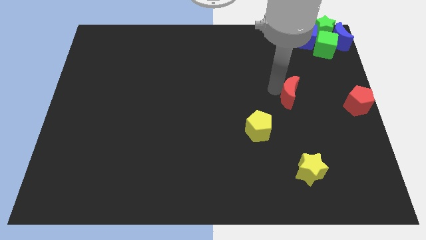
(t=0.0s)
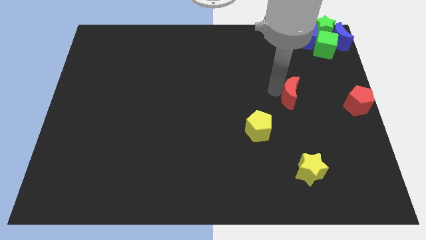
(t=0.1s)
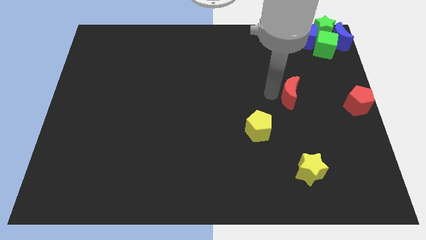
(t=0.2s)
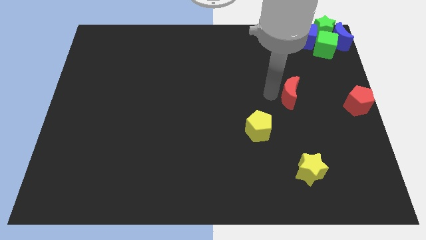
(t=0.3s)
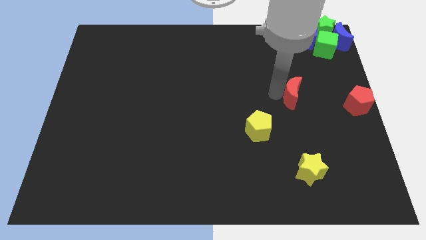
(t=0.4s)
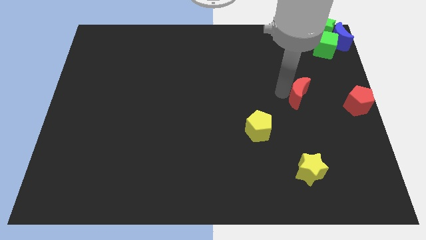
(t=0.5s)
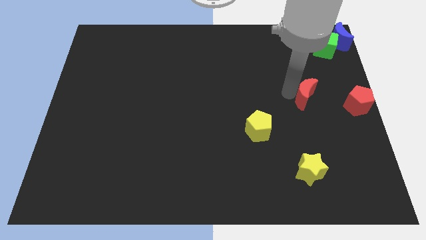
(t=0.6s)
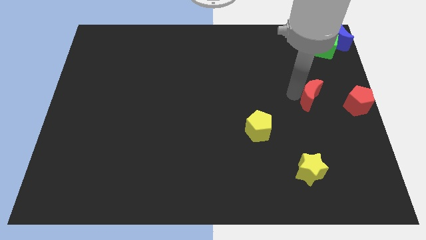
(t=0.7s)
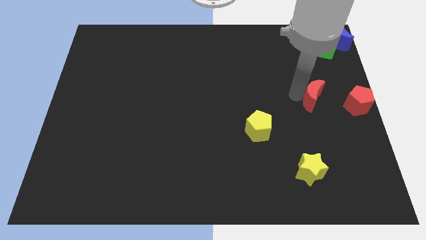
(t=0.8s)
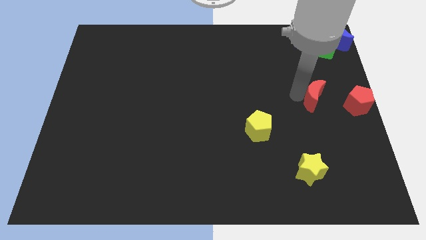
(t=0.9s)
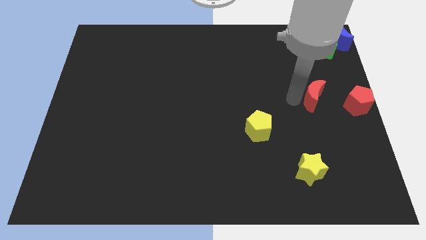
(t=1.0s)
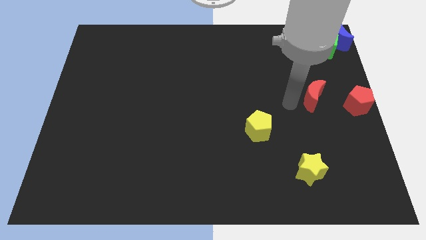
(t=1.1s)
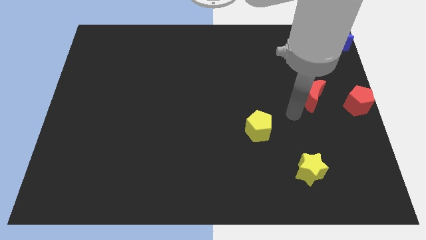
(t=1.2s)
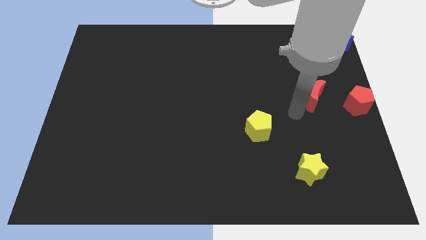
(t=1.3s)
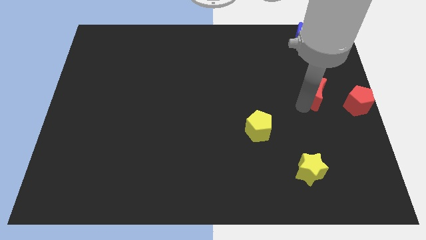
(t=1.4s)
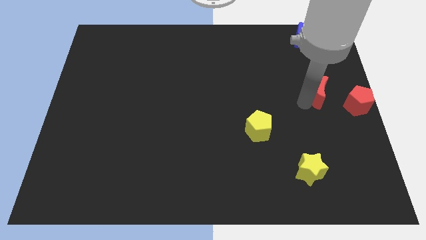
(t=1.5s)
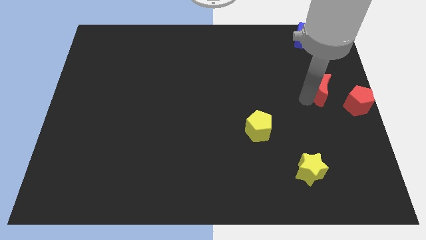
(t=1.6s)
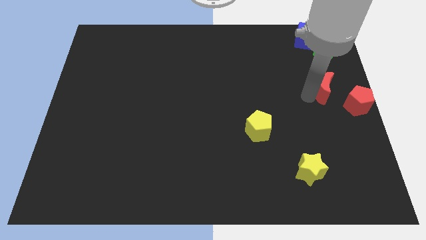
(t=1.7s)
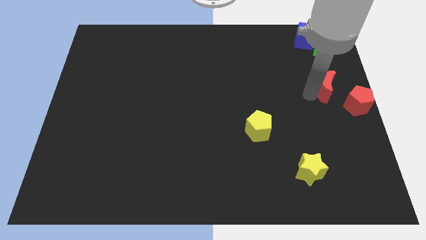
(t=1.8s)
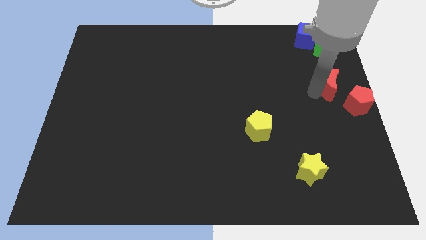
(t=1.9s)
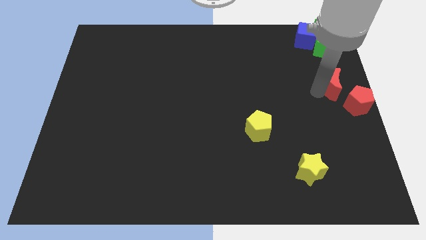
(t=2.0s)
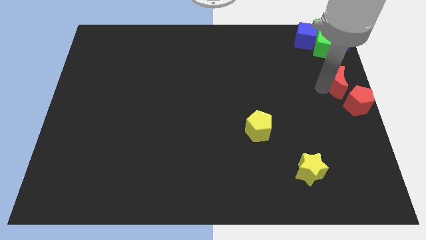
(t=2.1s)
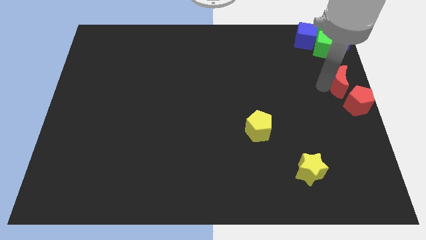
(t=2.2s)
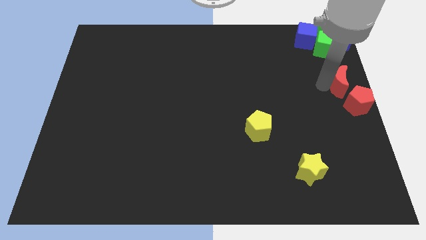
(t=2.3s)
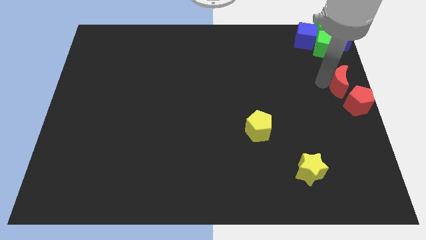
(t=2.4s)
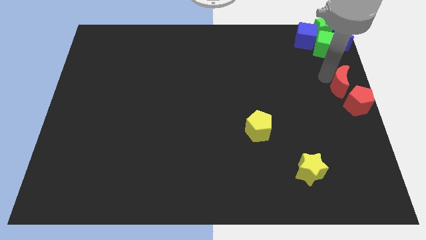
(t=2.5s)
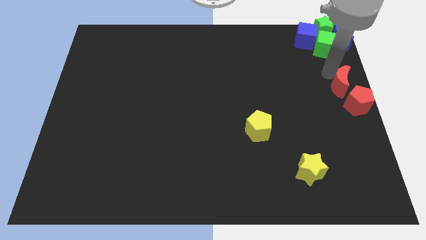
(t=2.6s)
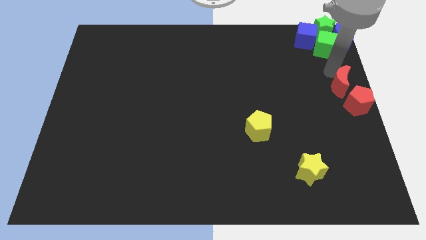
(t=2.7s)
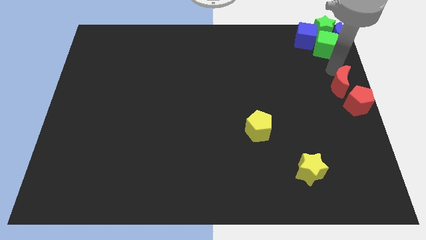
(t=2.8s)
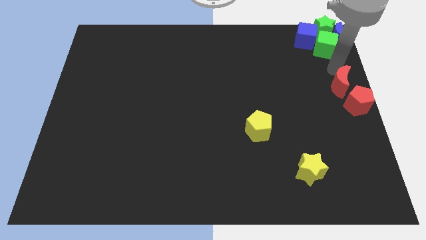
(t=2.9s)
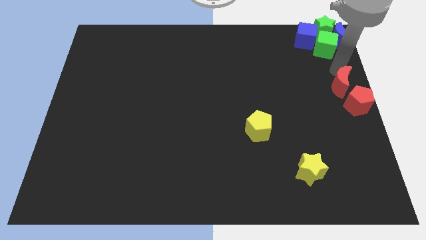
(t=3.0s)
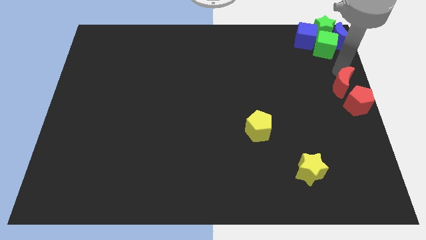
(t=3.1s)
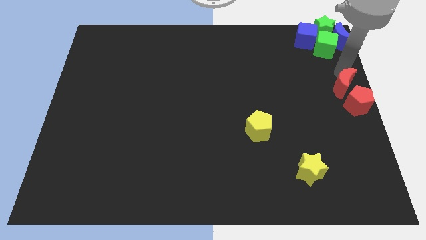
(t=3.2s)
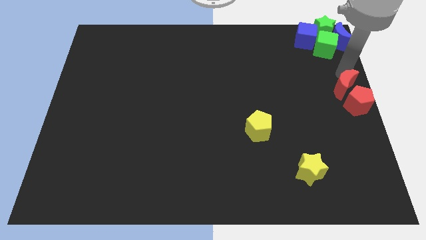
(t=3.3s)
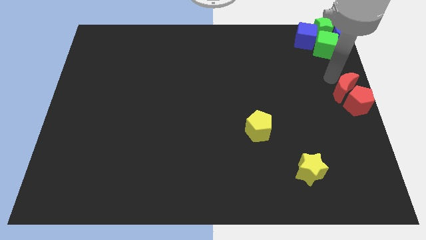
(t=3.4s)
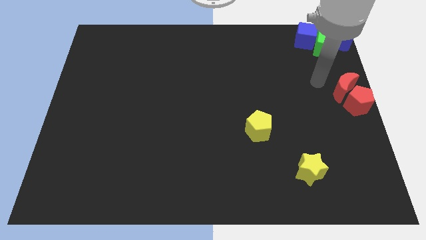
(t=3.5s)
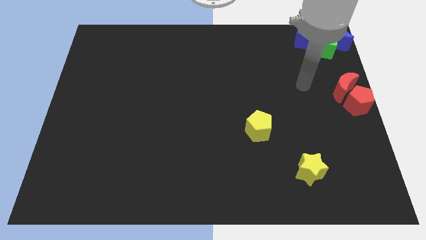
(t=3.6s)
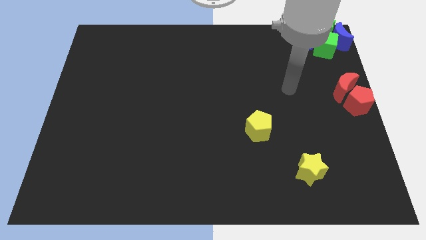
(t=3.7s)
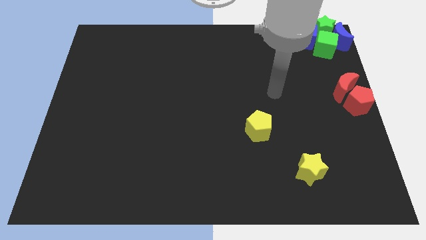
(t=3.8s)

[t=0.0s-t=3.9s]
put the red moon at the center right corner

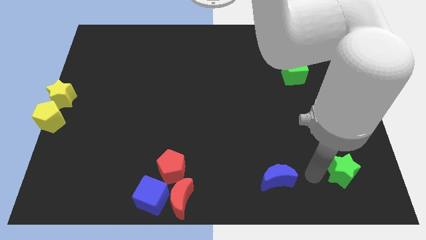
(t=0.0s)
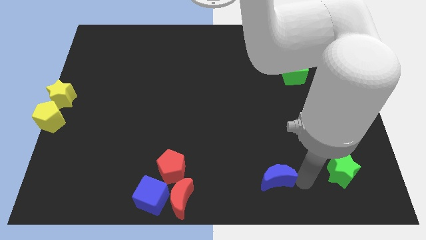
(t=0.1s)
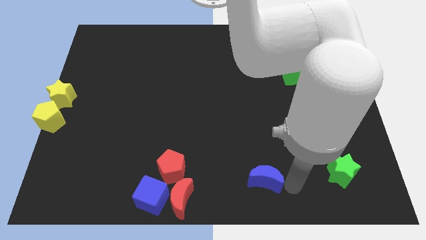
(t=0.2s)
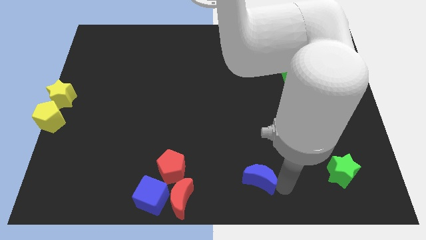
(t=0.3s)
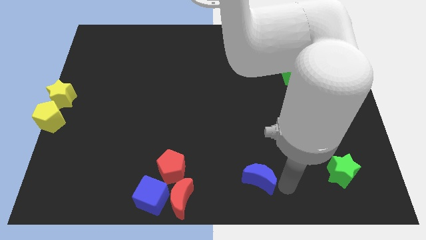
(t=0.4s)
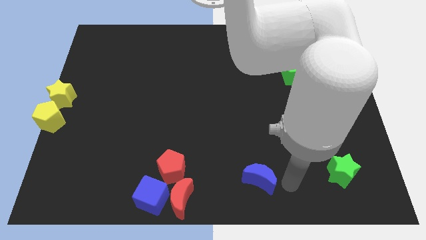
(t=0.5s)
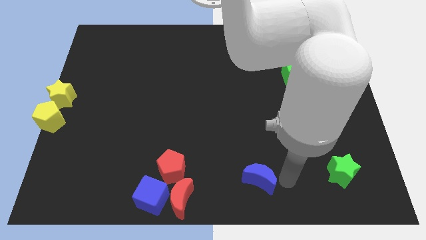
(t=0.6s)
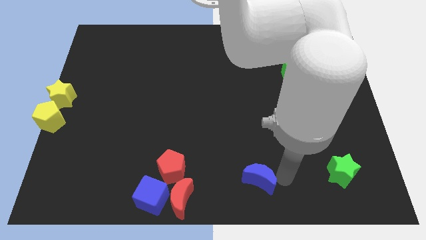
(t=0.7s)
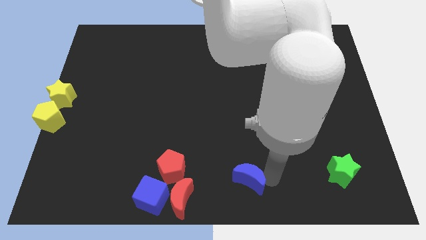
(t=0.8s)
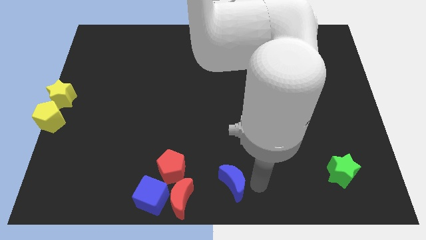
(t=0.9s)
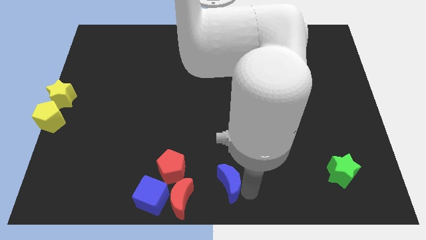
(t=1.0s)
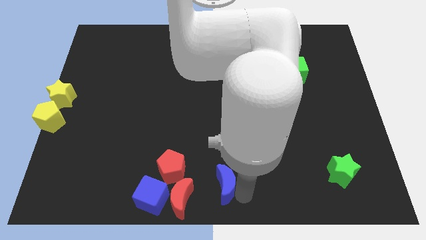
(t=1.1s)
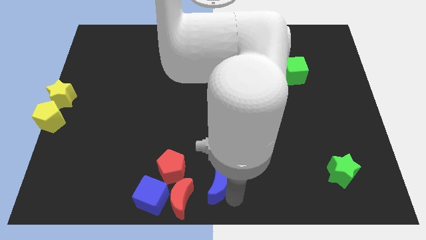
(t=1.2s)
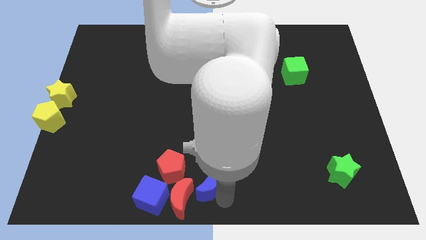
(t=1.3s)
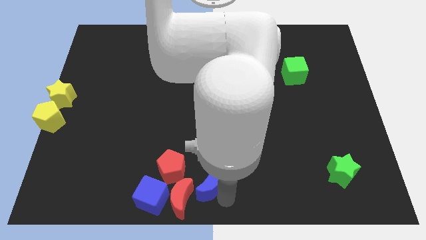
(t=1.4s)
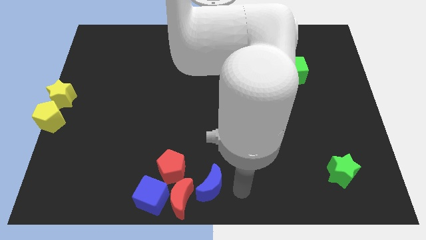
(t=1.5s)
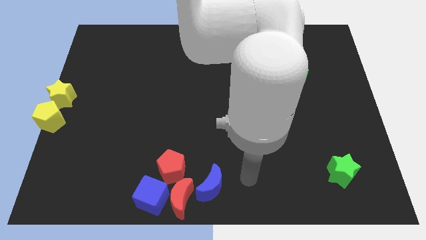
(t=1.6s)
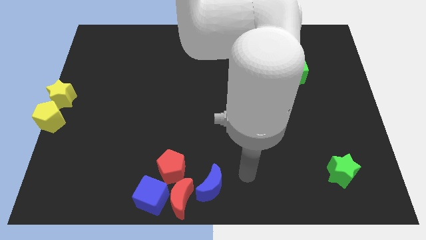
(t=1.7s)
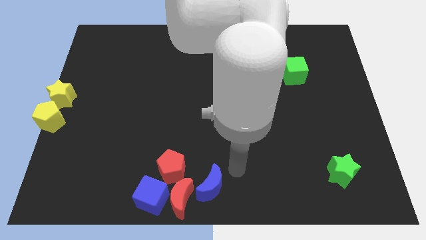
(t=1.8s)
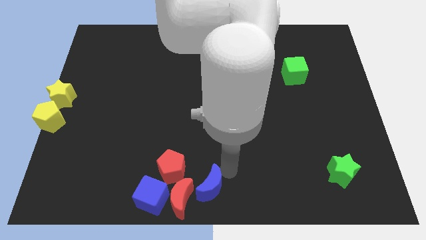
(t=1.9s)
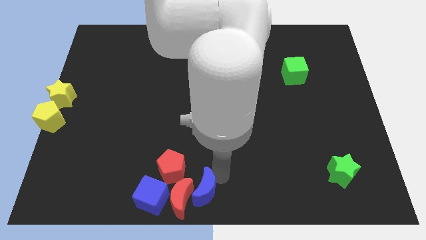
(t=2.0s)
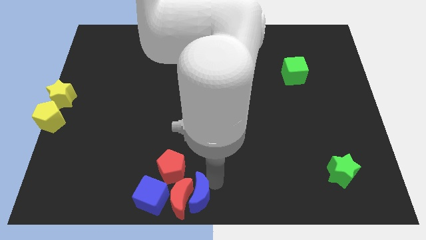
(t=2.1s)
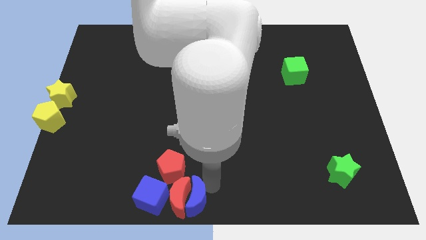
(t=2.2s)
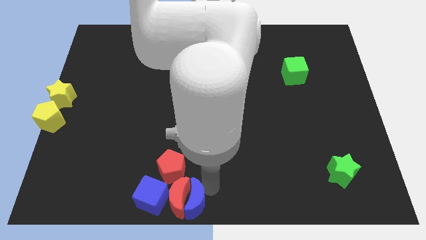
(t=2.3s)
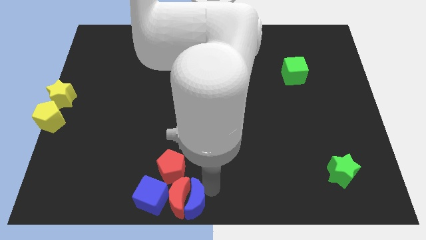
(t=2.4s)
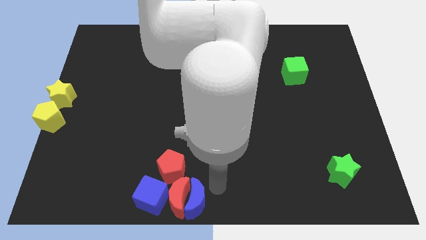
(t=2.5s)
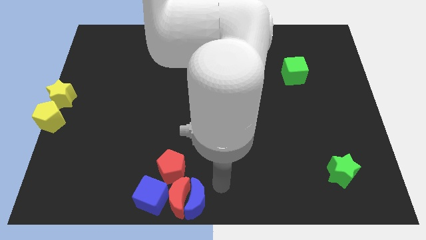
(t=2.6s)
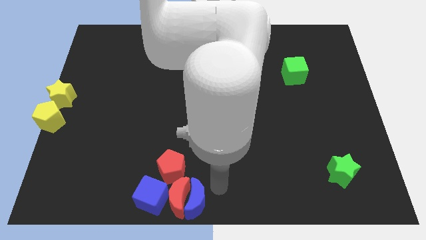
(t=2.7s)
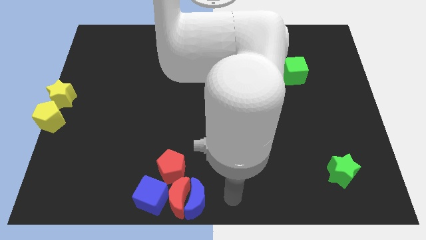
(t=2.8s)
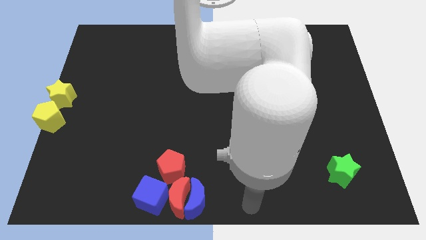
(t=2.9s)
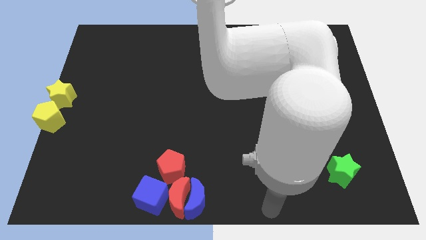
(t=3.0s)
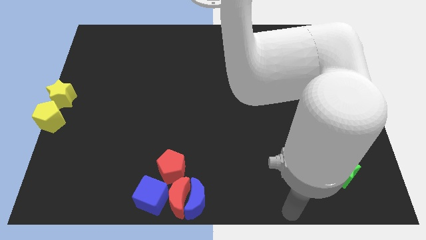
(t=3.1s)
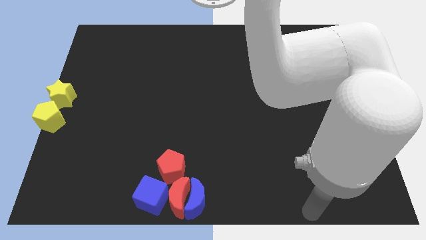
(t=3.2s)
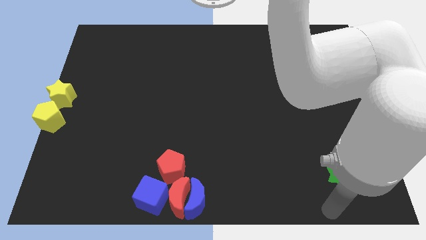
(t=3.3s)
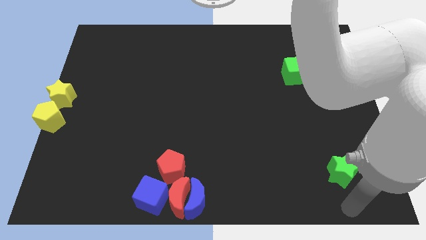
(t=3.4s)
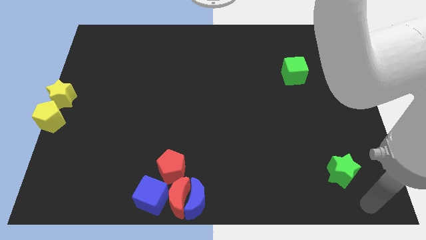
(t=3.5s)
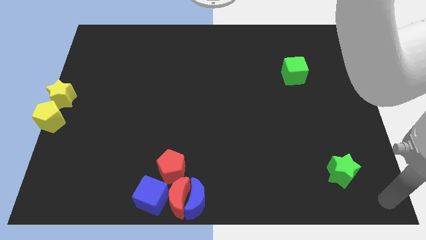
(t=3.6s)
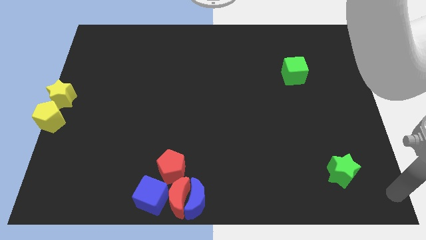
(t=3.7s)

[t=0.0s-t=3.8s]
move your arm to the right corner of the board

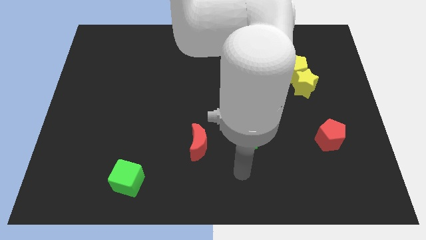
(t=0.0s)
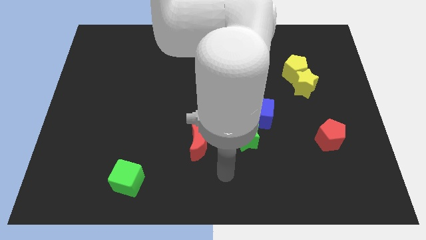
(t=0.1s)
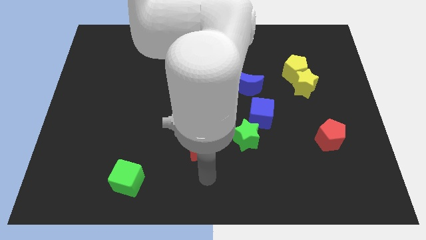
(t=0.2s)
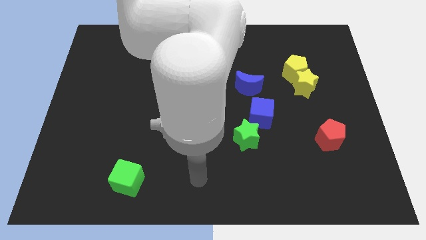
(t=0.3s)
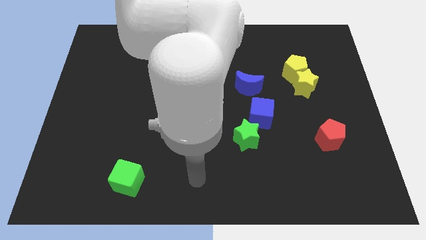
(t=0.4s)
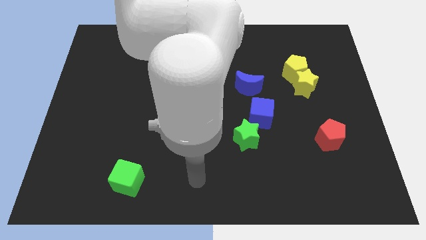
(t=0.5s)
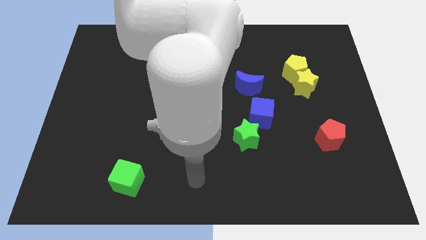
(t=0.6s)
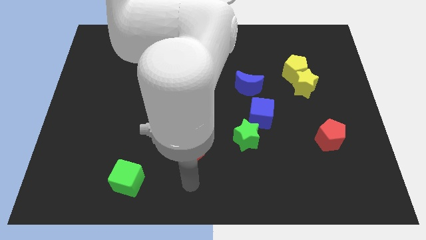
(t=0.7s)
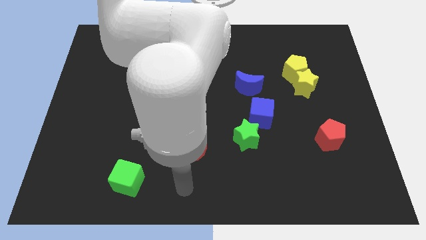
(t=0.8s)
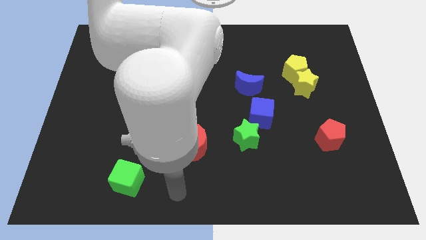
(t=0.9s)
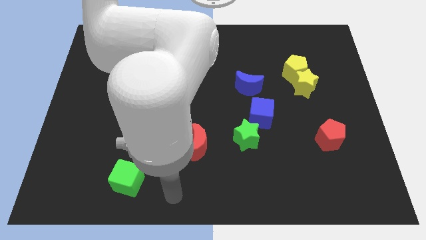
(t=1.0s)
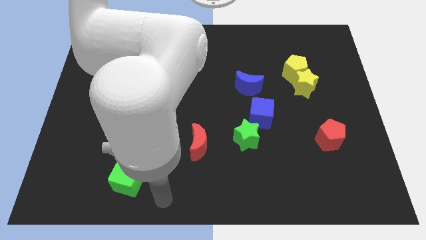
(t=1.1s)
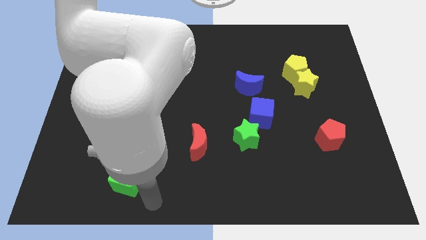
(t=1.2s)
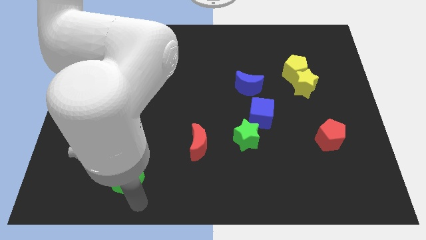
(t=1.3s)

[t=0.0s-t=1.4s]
move your arm to the bottom right of the green cube
